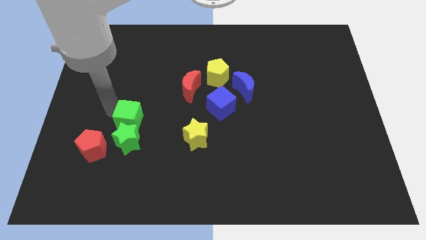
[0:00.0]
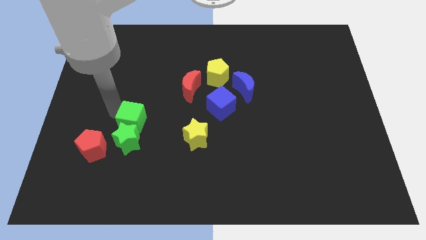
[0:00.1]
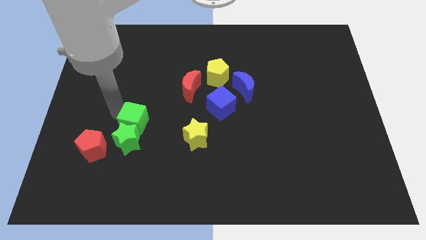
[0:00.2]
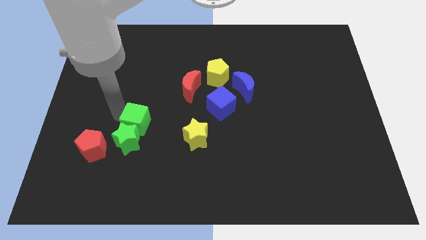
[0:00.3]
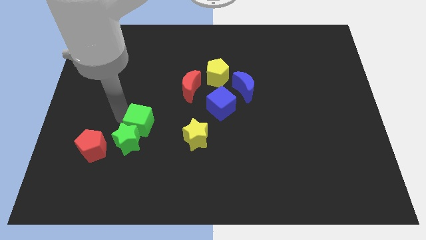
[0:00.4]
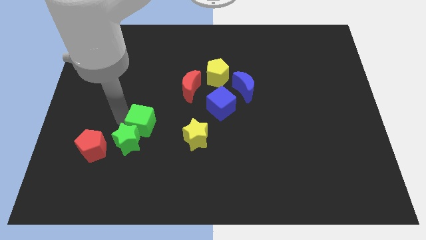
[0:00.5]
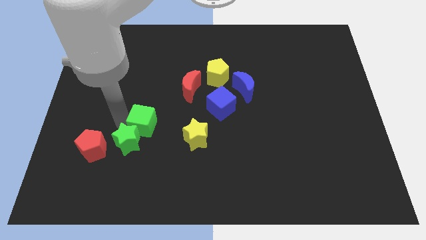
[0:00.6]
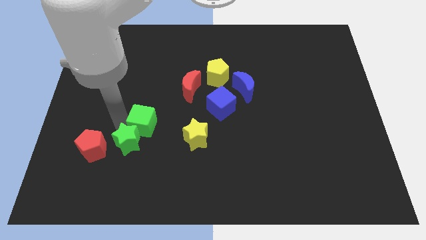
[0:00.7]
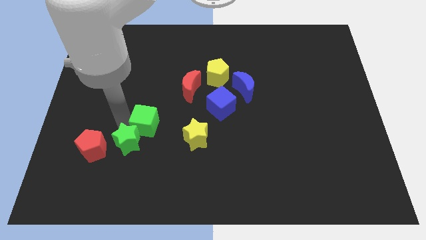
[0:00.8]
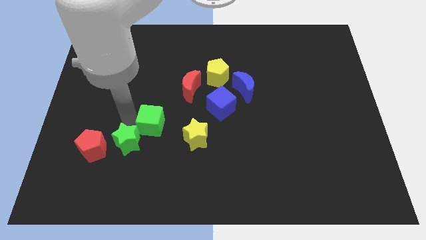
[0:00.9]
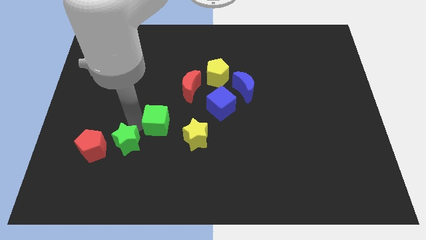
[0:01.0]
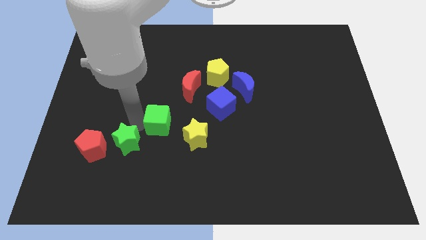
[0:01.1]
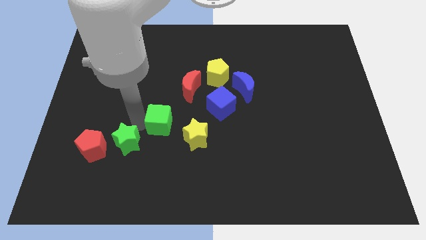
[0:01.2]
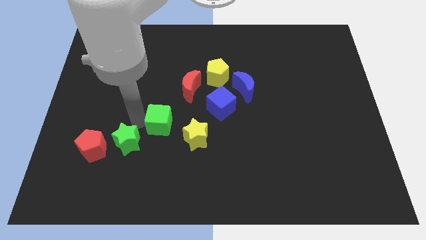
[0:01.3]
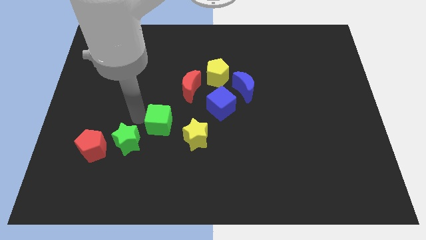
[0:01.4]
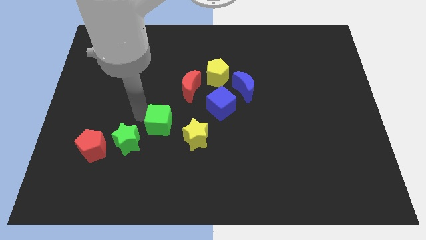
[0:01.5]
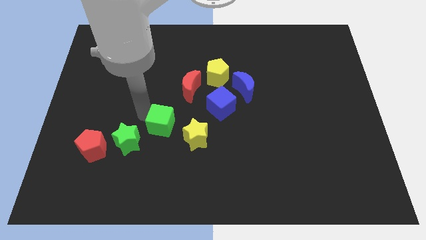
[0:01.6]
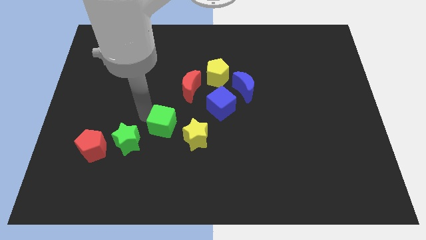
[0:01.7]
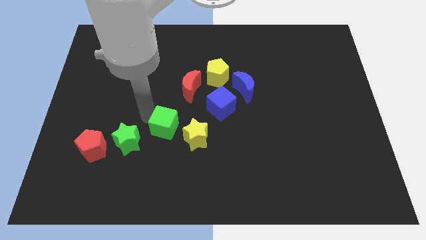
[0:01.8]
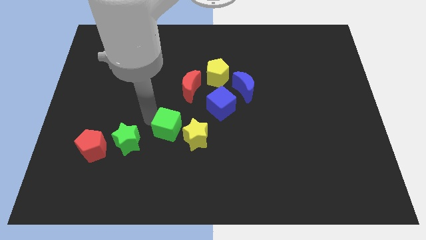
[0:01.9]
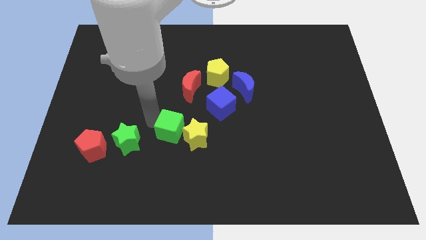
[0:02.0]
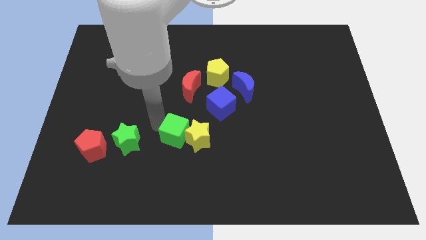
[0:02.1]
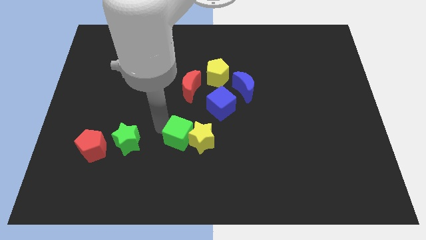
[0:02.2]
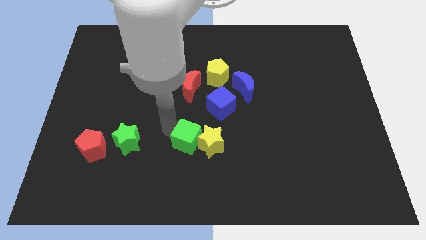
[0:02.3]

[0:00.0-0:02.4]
push the green cube to the left of the yellow star

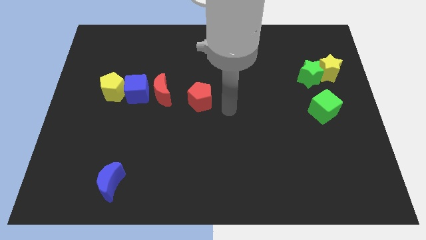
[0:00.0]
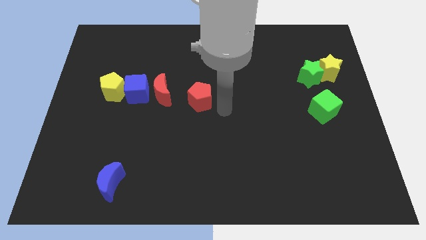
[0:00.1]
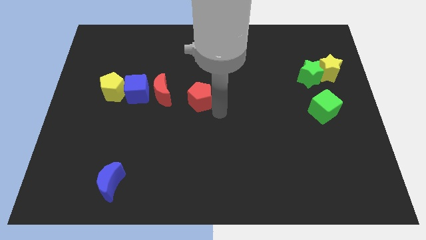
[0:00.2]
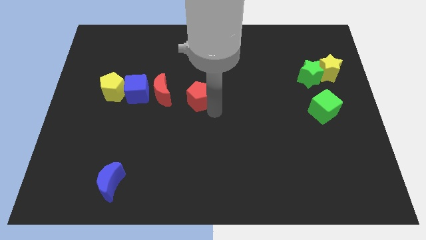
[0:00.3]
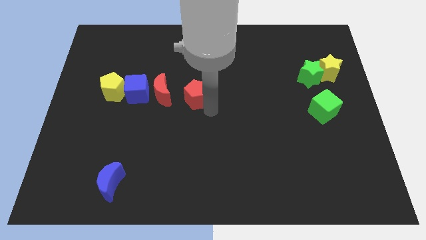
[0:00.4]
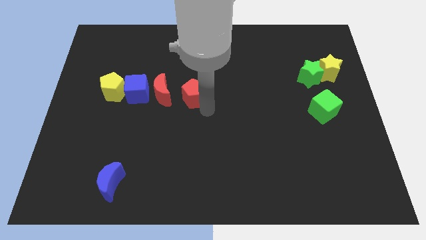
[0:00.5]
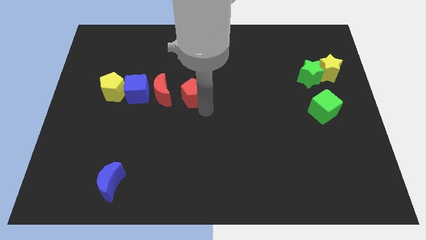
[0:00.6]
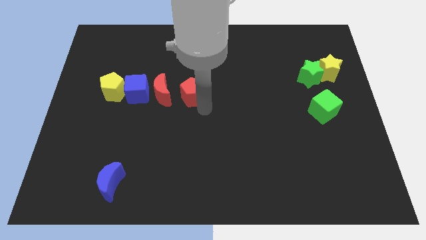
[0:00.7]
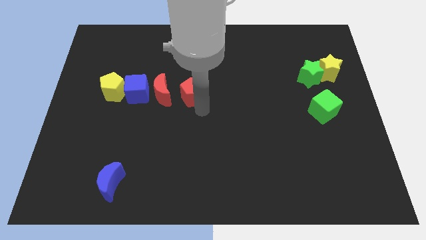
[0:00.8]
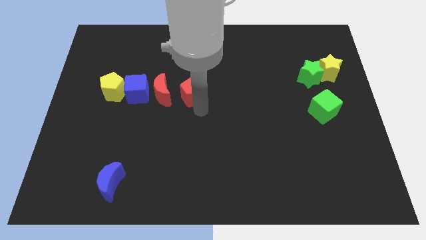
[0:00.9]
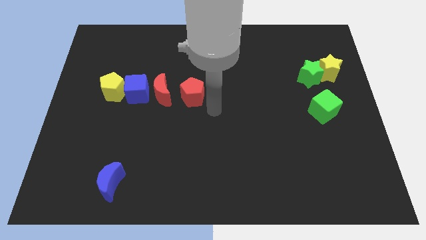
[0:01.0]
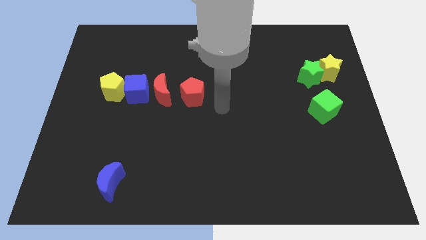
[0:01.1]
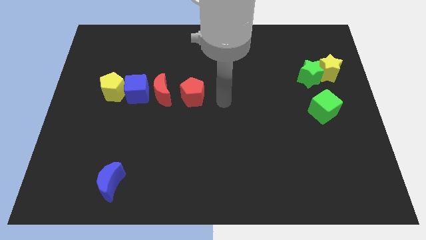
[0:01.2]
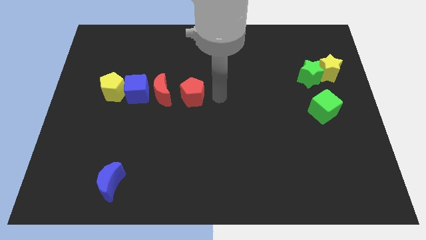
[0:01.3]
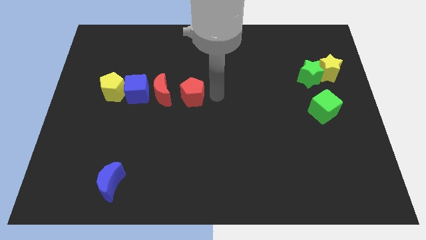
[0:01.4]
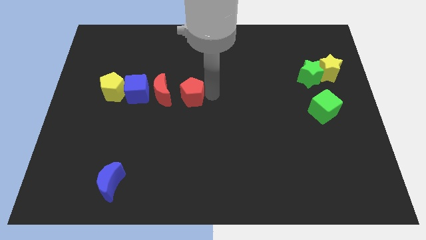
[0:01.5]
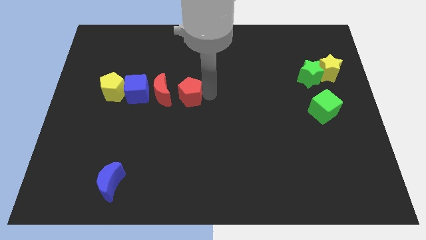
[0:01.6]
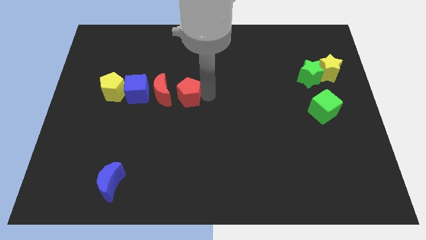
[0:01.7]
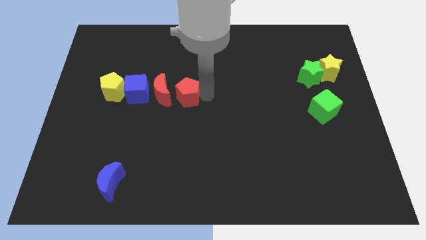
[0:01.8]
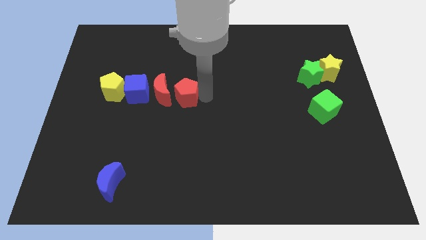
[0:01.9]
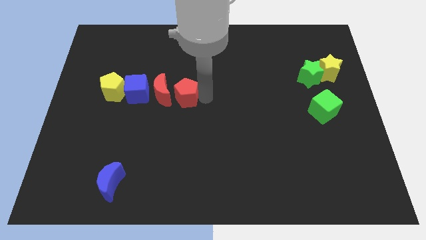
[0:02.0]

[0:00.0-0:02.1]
move the red pentagon to the right of the red crescent

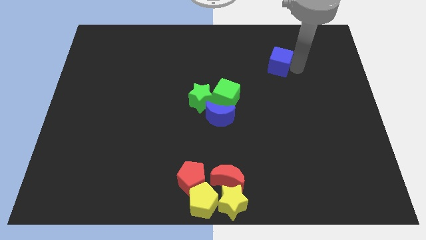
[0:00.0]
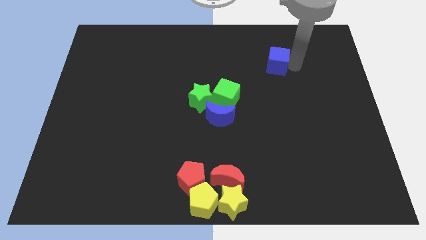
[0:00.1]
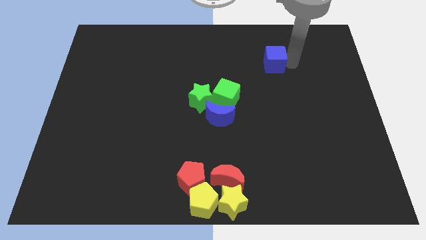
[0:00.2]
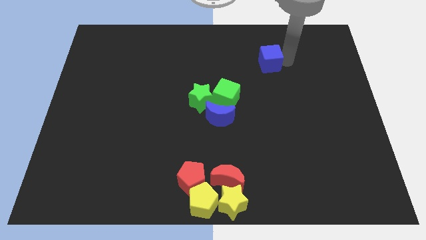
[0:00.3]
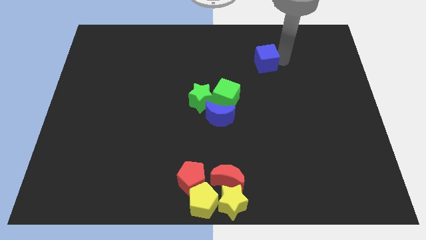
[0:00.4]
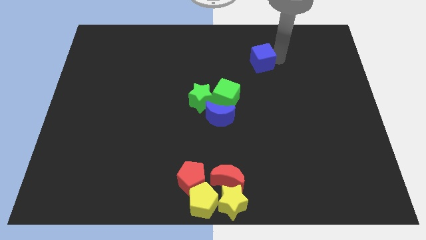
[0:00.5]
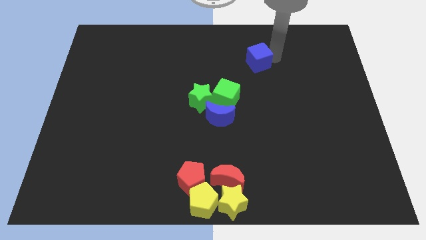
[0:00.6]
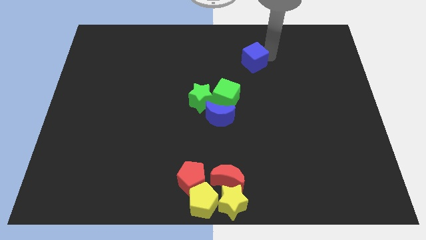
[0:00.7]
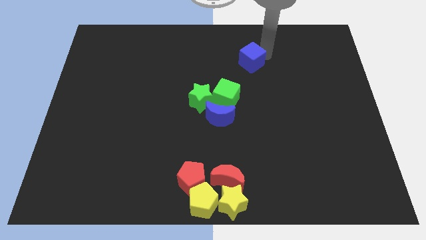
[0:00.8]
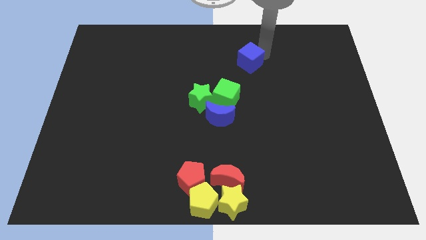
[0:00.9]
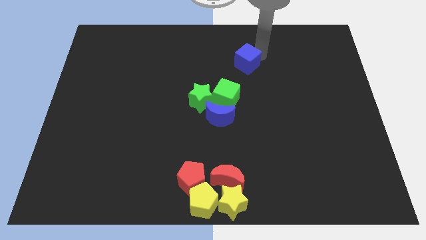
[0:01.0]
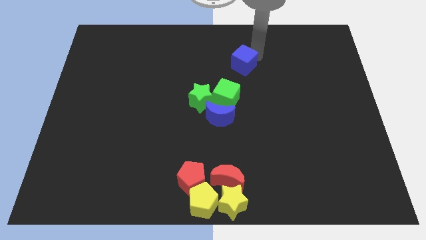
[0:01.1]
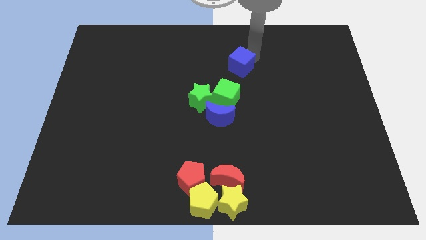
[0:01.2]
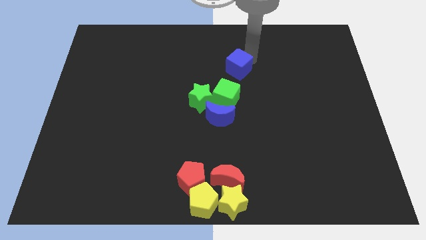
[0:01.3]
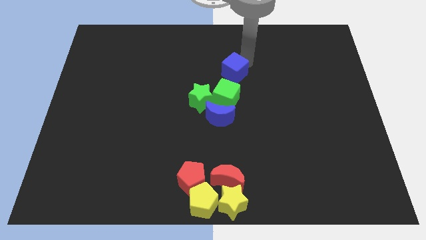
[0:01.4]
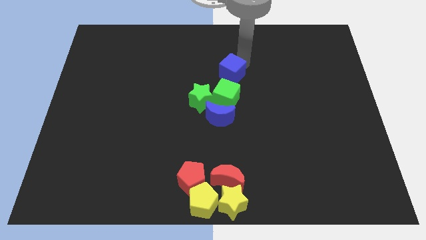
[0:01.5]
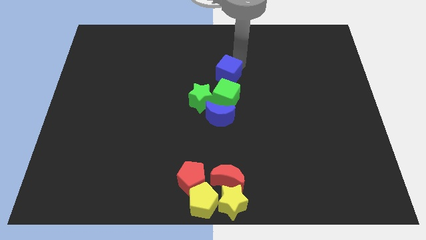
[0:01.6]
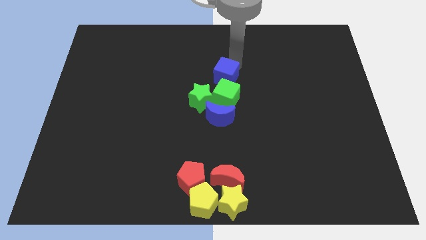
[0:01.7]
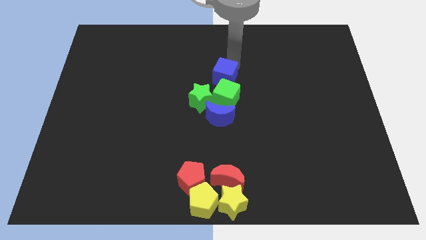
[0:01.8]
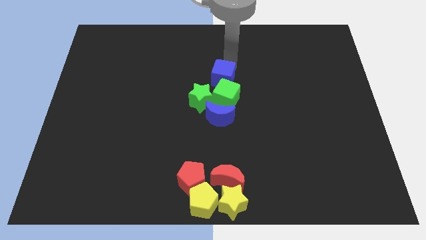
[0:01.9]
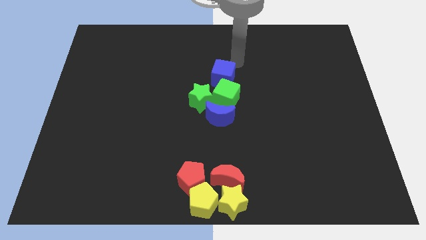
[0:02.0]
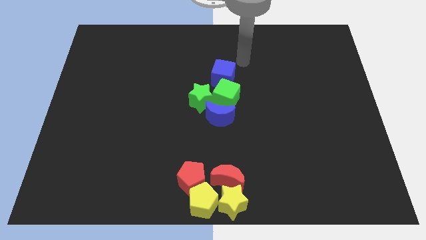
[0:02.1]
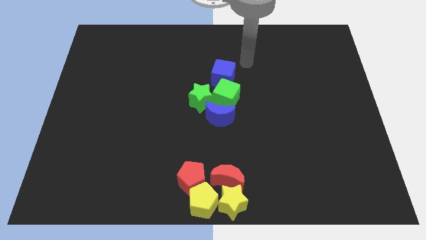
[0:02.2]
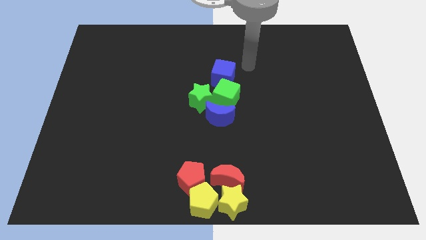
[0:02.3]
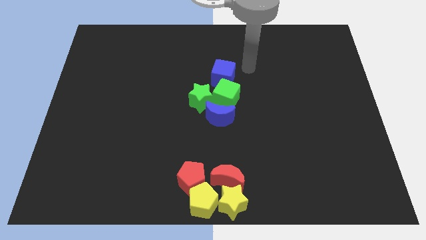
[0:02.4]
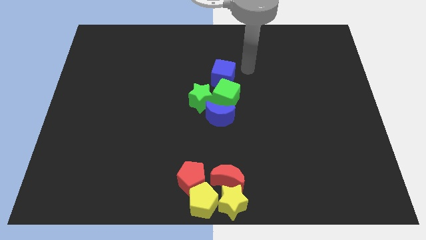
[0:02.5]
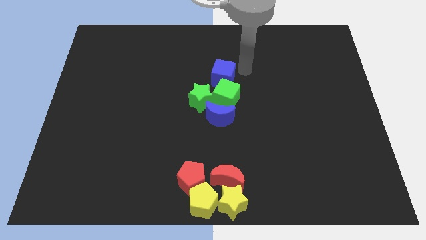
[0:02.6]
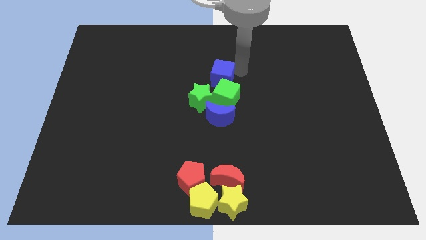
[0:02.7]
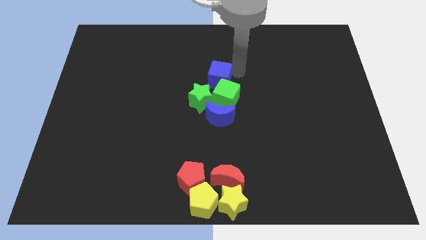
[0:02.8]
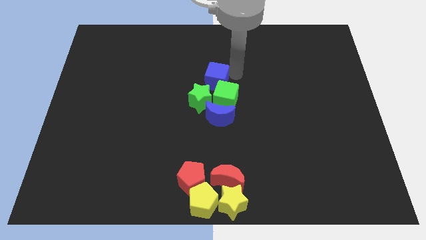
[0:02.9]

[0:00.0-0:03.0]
move the blue cube above the green cube

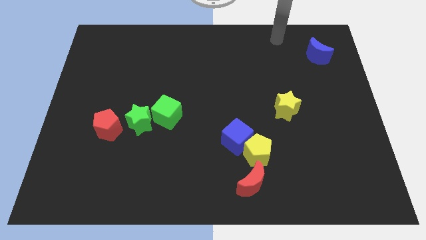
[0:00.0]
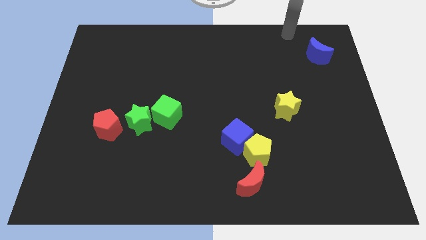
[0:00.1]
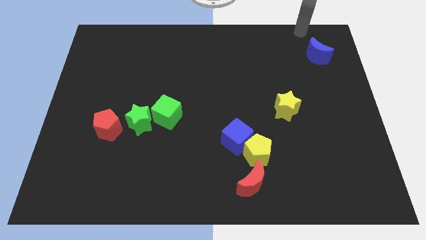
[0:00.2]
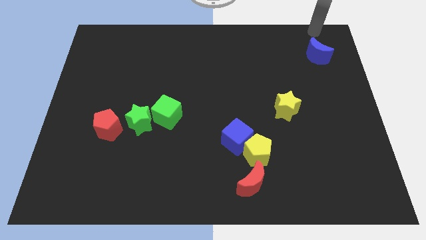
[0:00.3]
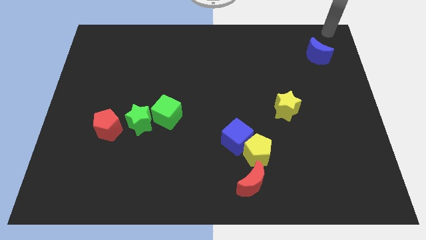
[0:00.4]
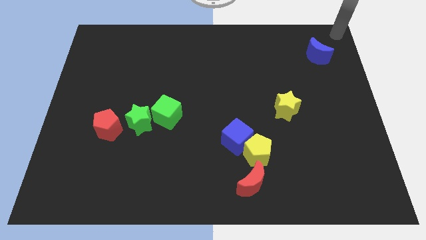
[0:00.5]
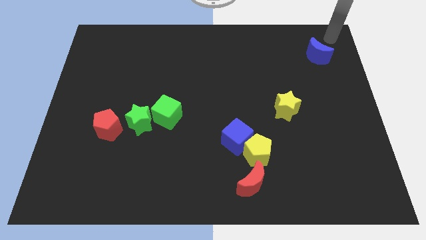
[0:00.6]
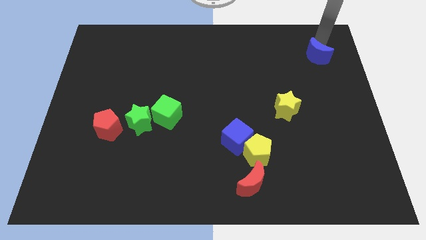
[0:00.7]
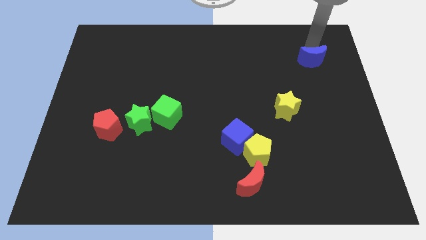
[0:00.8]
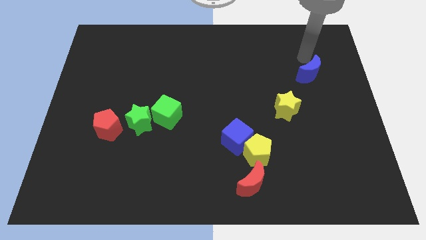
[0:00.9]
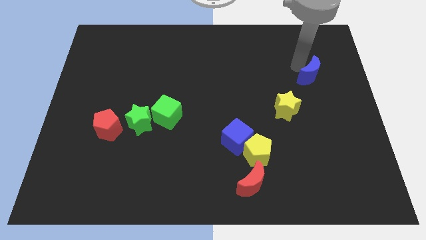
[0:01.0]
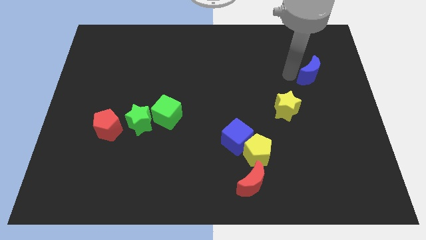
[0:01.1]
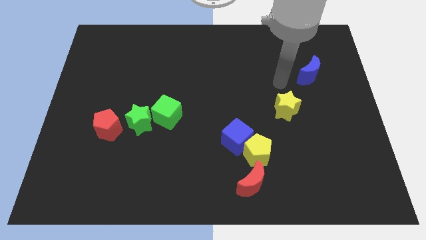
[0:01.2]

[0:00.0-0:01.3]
move blue moon slightly down

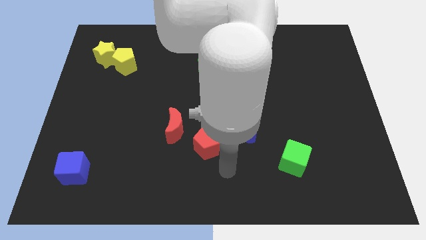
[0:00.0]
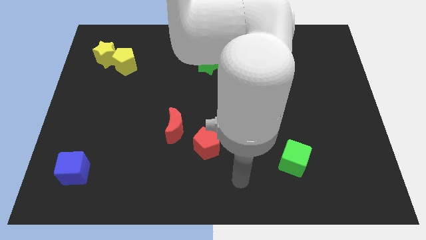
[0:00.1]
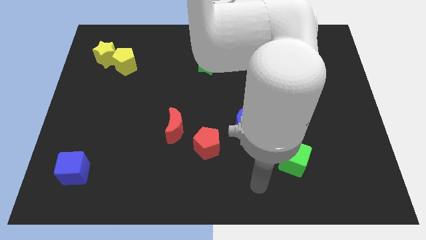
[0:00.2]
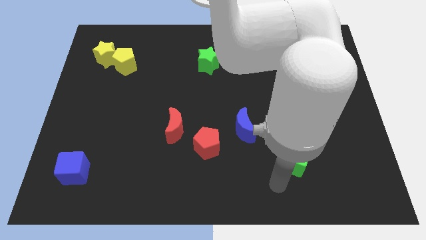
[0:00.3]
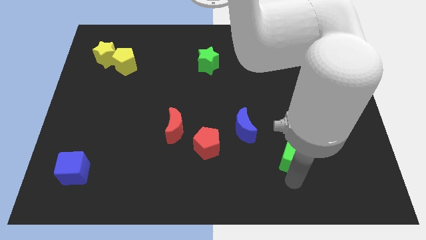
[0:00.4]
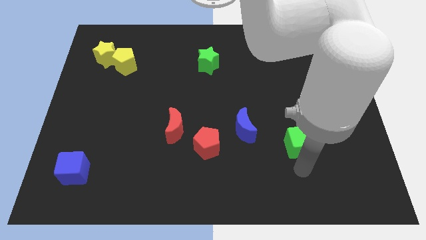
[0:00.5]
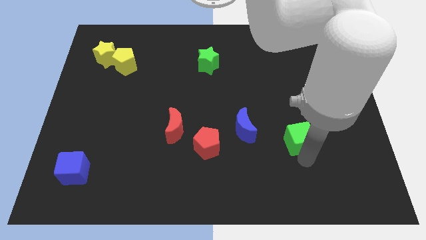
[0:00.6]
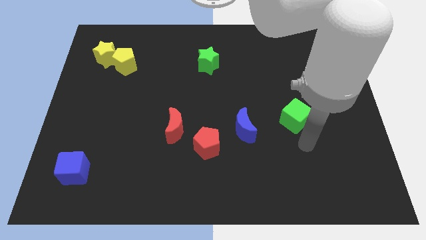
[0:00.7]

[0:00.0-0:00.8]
place the green cube right to the blue moon
